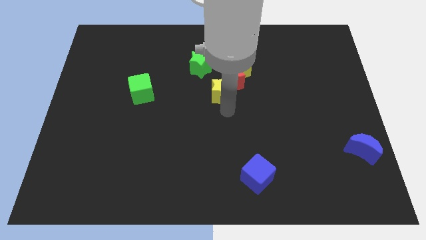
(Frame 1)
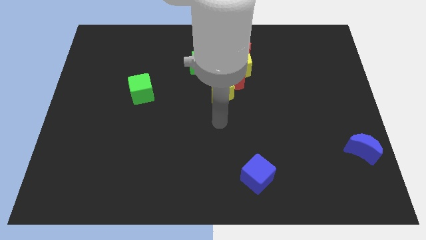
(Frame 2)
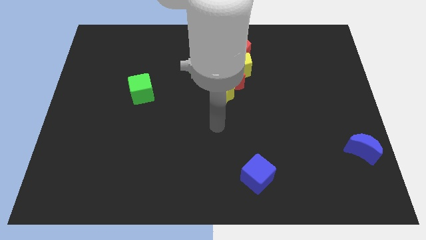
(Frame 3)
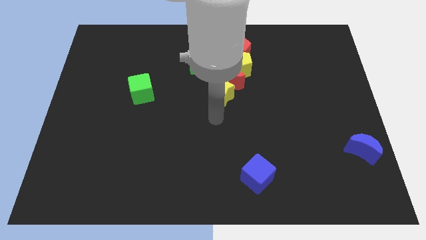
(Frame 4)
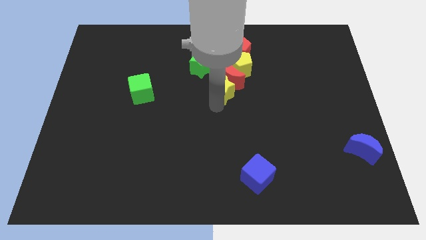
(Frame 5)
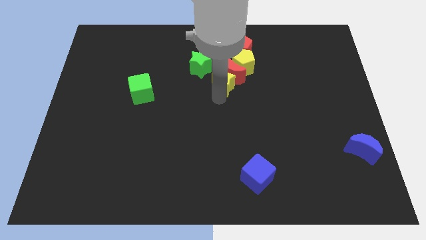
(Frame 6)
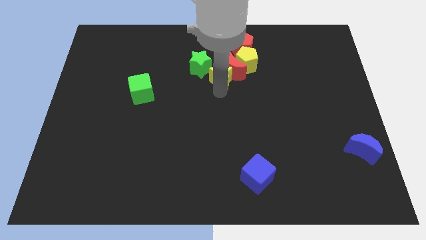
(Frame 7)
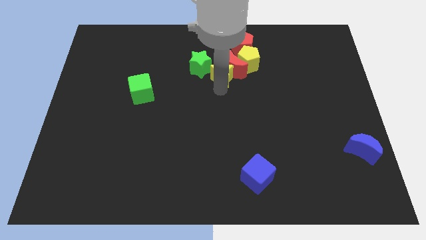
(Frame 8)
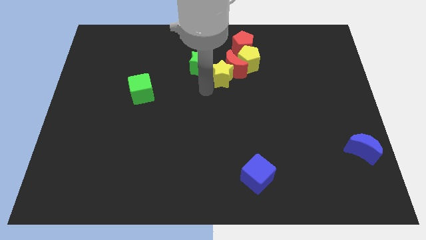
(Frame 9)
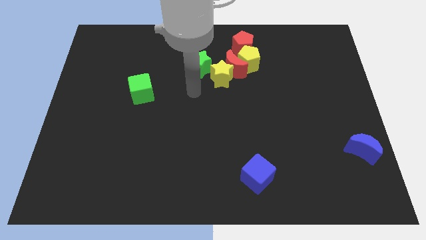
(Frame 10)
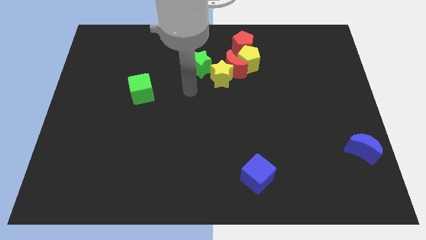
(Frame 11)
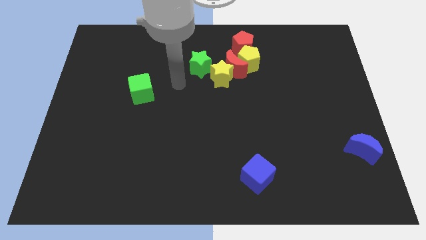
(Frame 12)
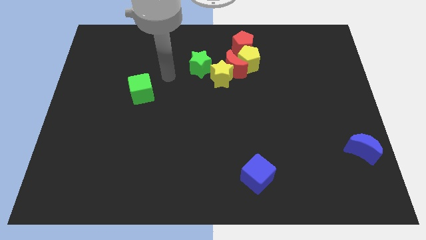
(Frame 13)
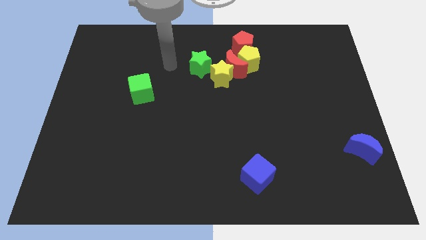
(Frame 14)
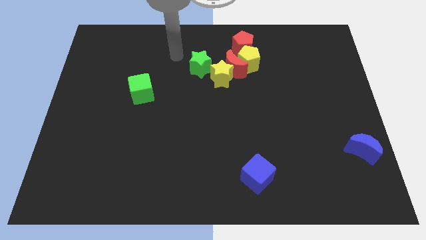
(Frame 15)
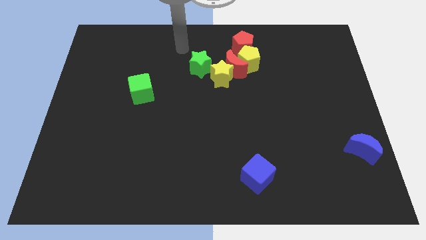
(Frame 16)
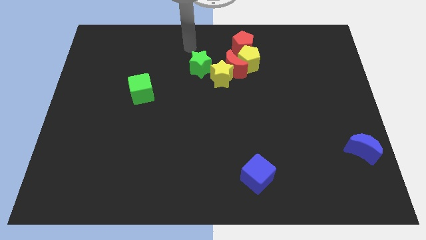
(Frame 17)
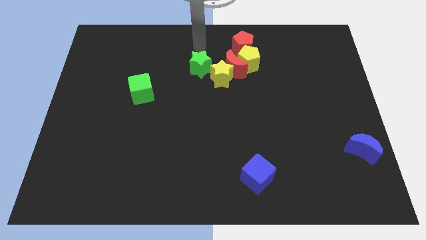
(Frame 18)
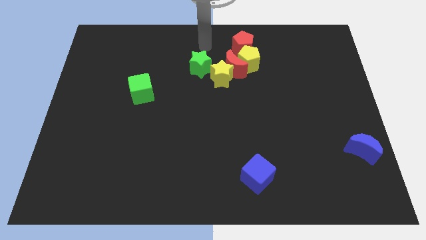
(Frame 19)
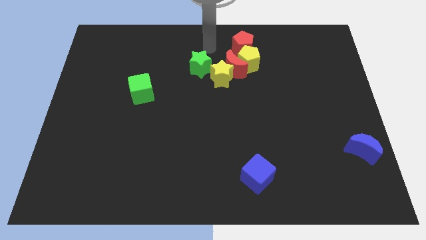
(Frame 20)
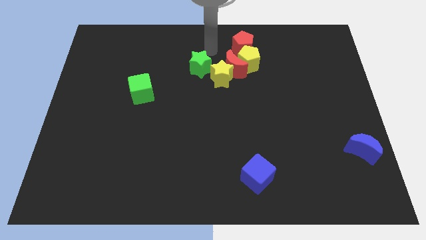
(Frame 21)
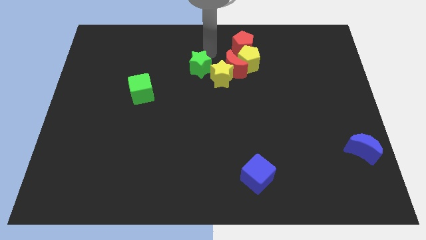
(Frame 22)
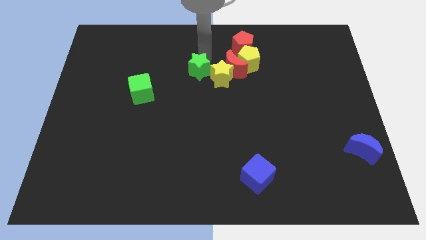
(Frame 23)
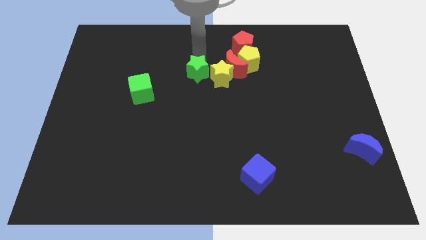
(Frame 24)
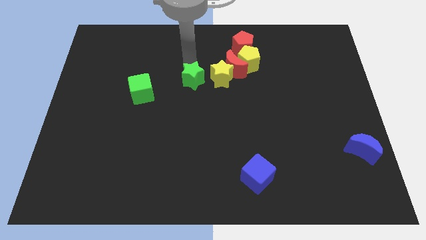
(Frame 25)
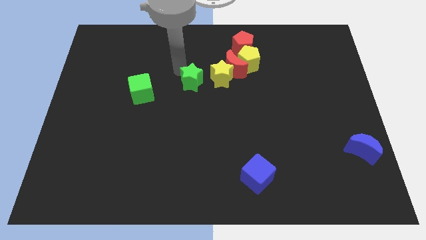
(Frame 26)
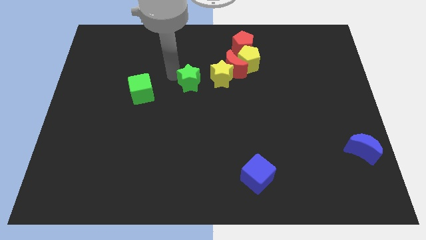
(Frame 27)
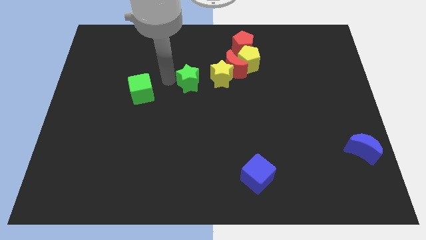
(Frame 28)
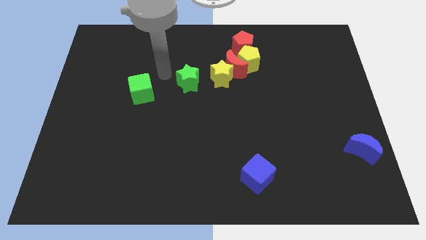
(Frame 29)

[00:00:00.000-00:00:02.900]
separate the green star from a group of blocks

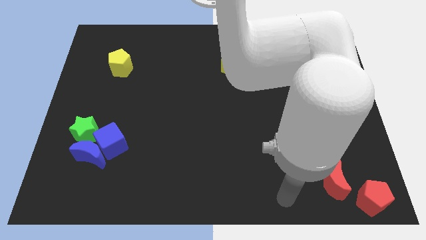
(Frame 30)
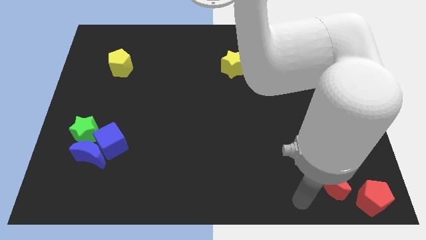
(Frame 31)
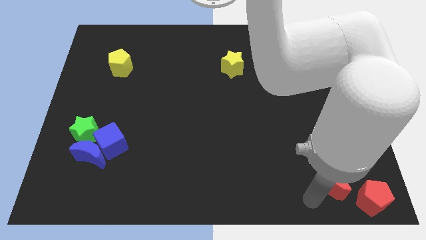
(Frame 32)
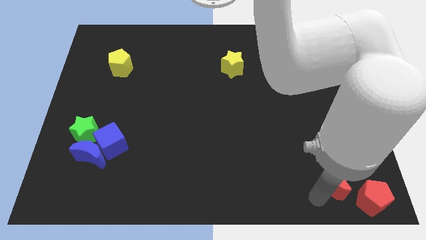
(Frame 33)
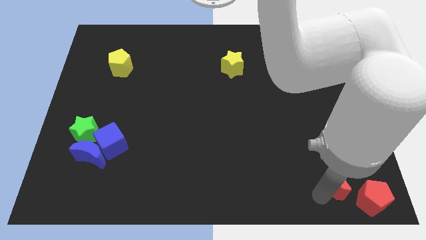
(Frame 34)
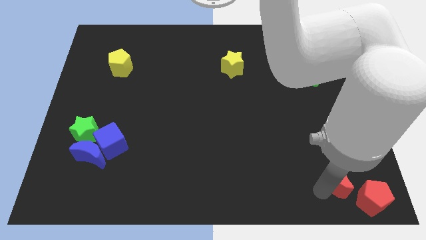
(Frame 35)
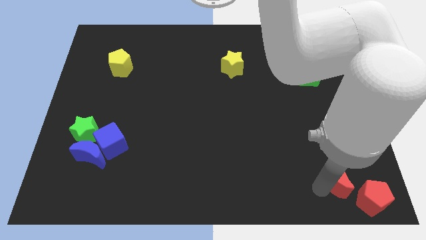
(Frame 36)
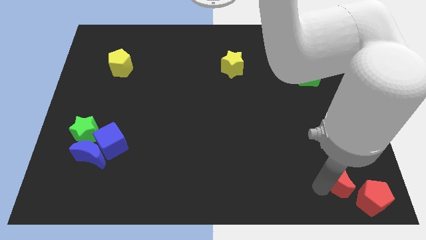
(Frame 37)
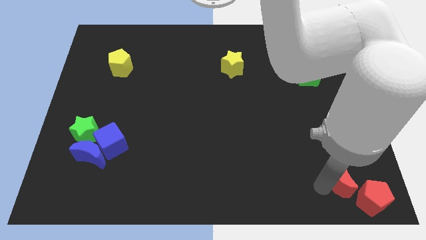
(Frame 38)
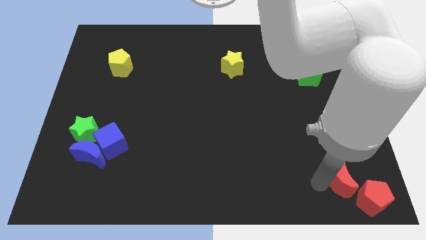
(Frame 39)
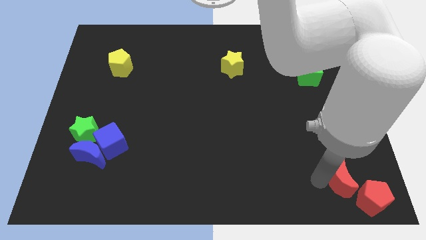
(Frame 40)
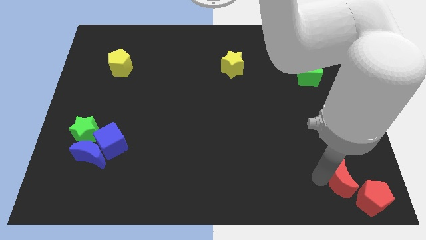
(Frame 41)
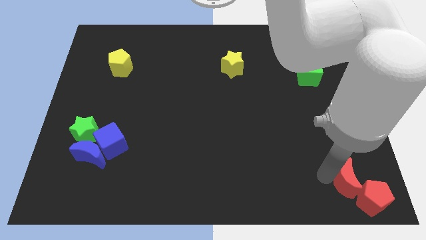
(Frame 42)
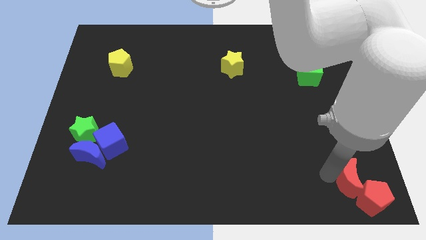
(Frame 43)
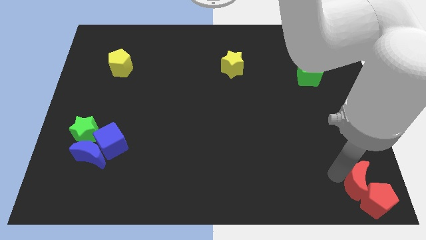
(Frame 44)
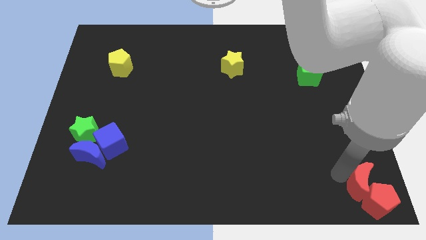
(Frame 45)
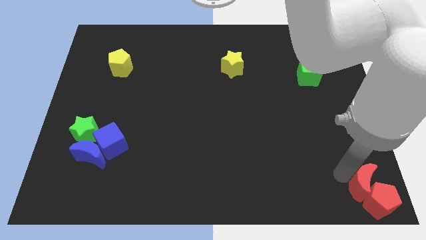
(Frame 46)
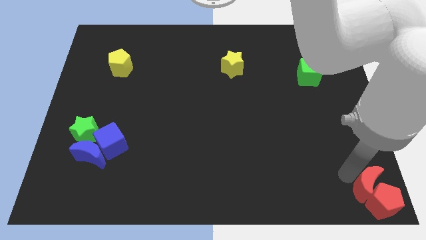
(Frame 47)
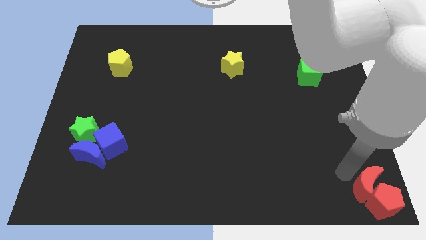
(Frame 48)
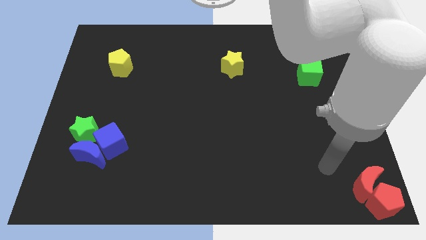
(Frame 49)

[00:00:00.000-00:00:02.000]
slide the red moon into the red pentagon

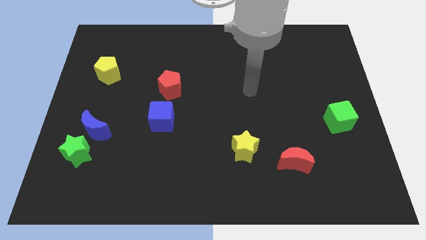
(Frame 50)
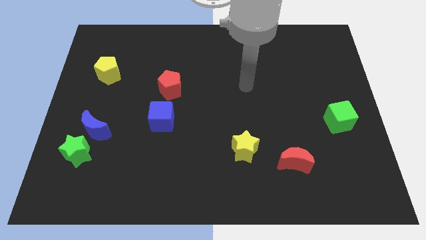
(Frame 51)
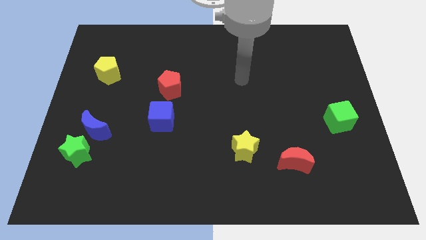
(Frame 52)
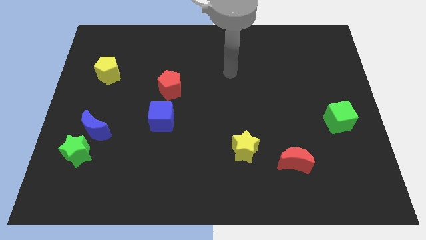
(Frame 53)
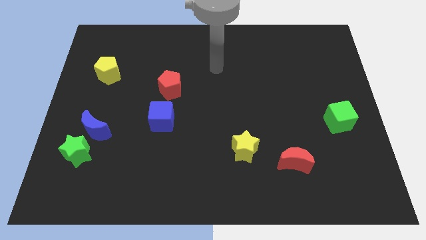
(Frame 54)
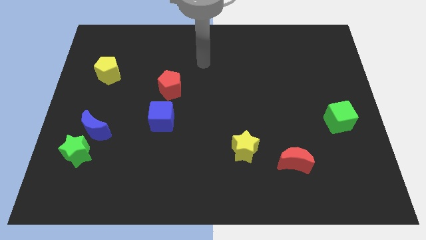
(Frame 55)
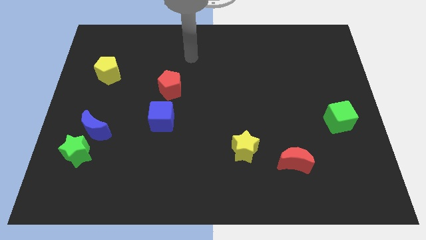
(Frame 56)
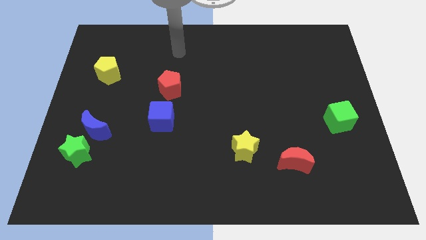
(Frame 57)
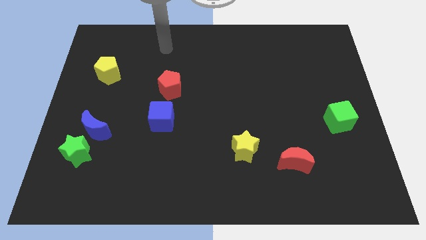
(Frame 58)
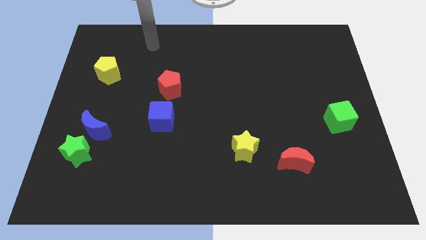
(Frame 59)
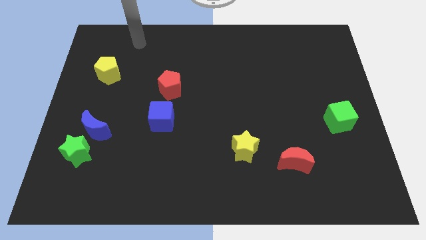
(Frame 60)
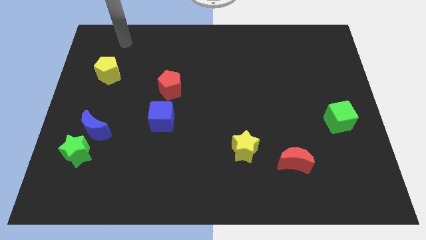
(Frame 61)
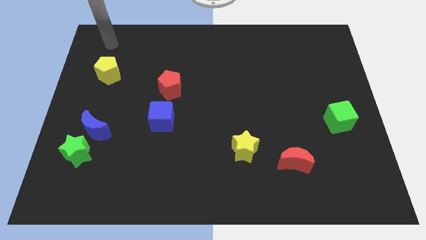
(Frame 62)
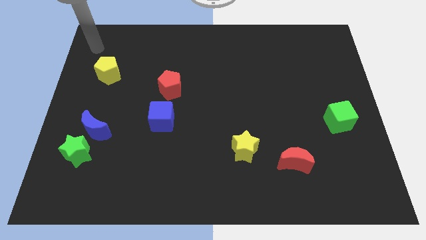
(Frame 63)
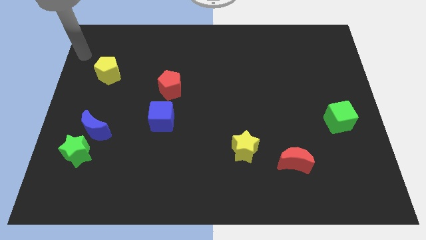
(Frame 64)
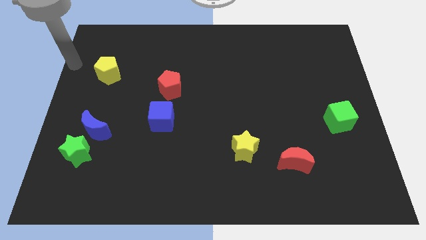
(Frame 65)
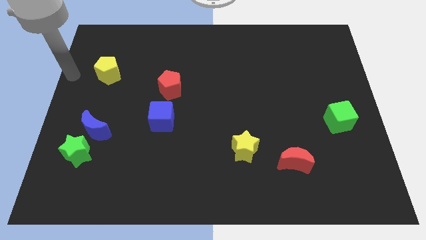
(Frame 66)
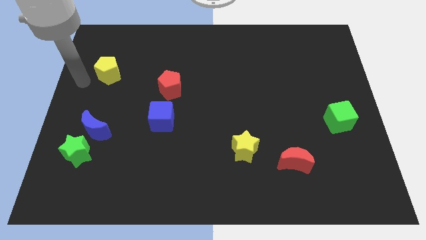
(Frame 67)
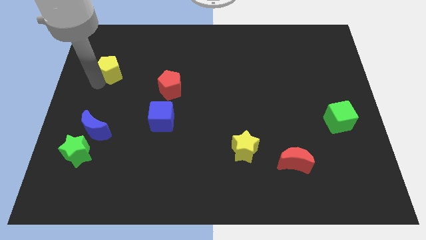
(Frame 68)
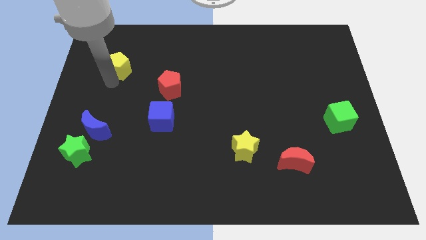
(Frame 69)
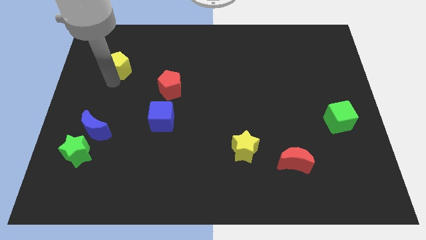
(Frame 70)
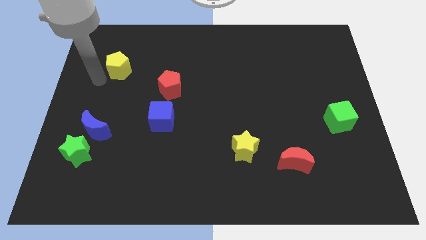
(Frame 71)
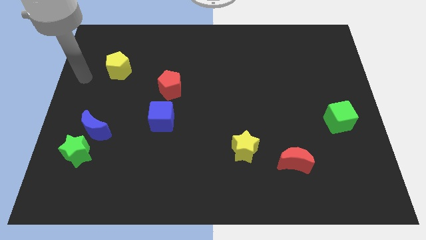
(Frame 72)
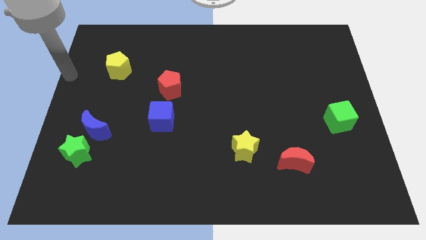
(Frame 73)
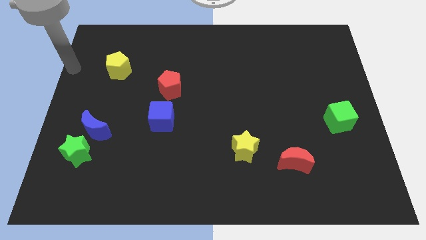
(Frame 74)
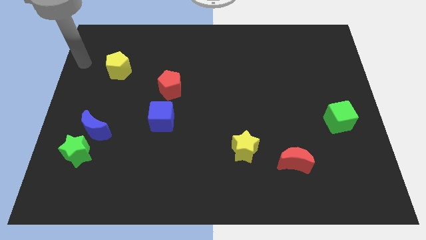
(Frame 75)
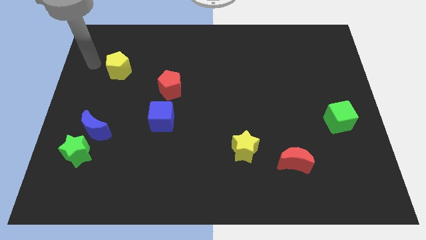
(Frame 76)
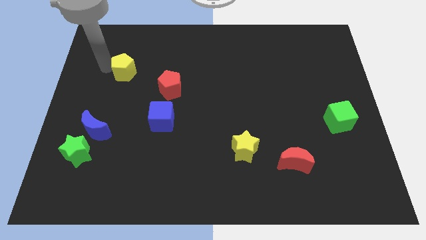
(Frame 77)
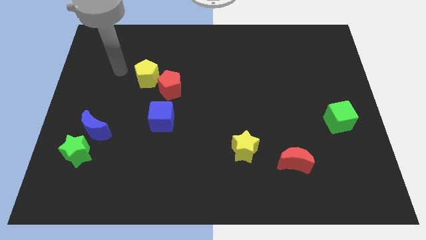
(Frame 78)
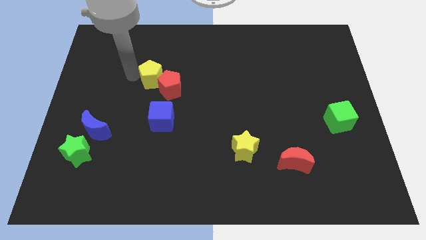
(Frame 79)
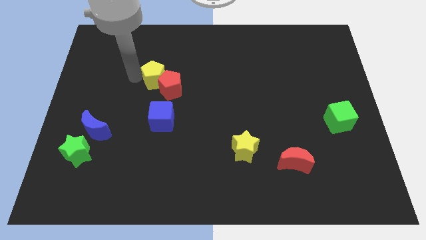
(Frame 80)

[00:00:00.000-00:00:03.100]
push pentagon into the red block

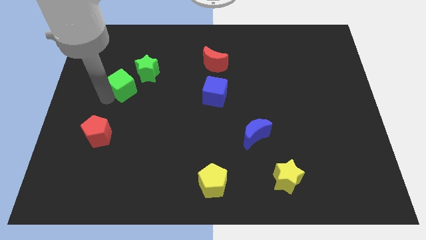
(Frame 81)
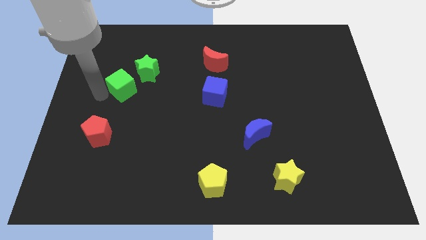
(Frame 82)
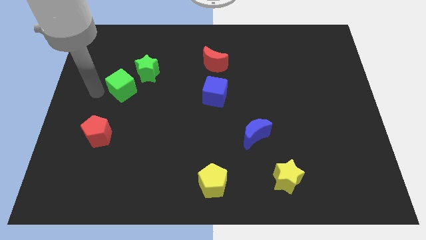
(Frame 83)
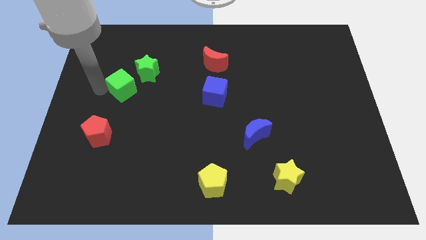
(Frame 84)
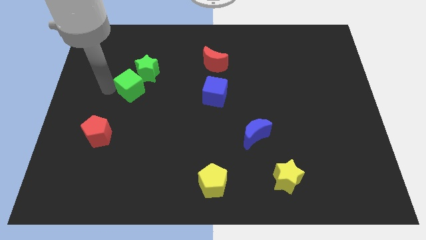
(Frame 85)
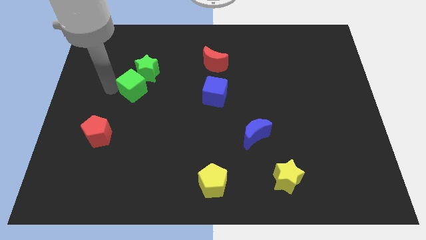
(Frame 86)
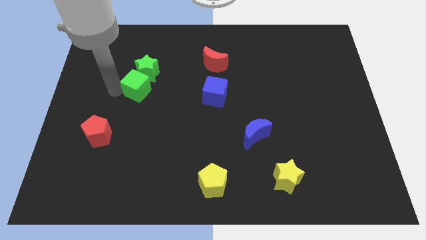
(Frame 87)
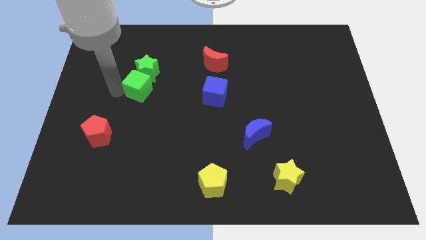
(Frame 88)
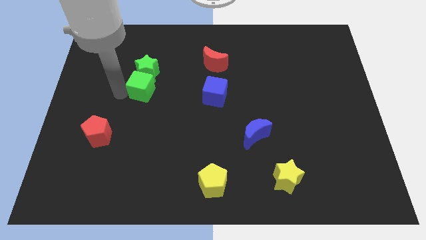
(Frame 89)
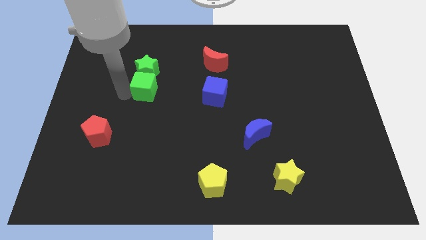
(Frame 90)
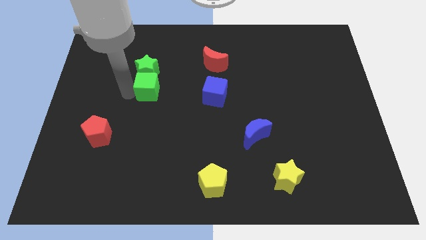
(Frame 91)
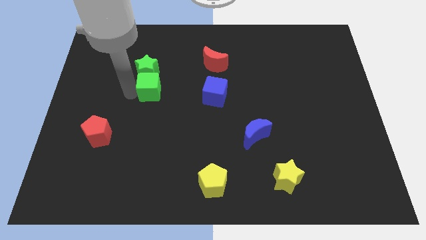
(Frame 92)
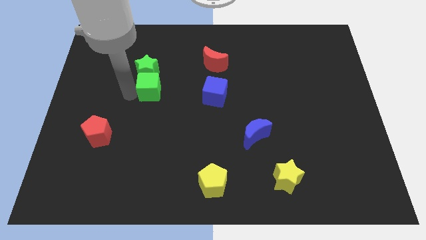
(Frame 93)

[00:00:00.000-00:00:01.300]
push the green cube below to the green star
